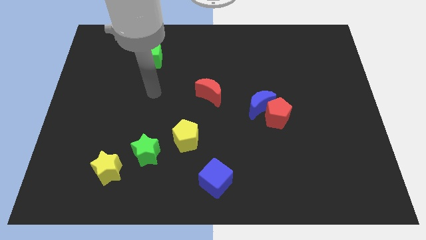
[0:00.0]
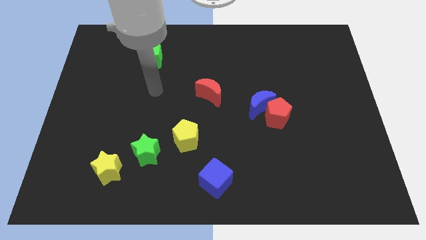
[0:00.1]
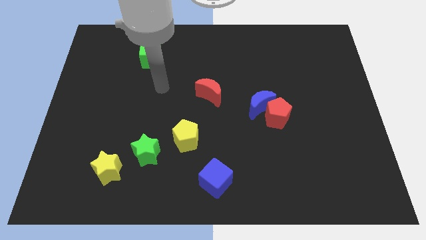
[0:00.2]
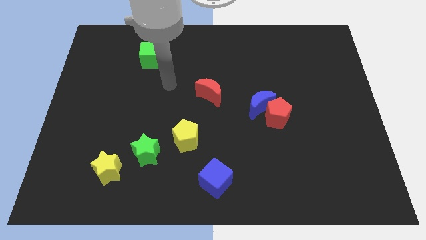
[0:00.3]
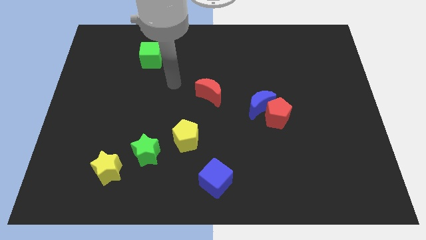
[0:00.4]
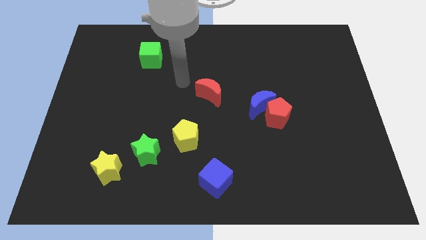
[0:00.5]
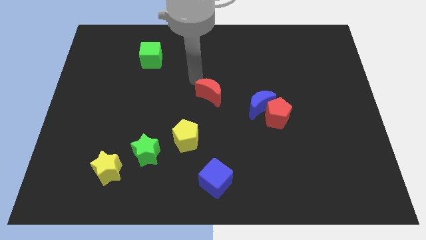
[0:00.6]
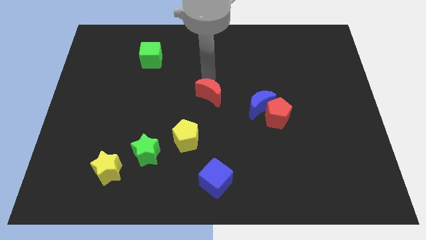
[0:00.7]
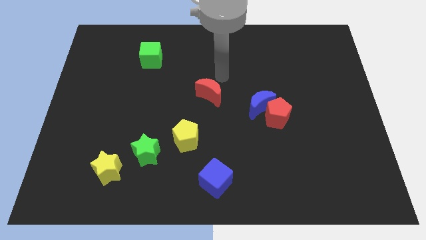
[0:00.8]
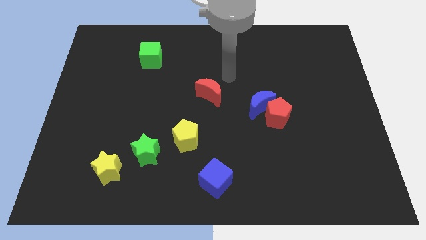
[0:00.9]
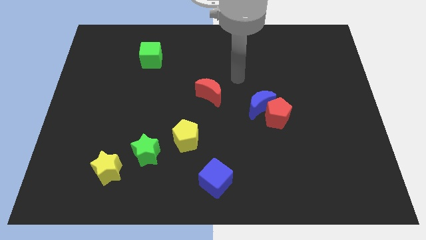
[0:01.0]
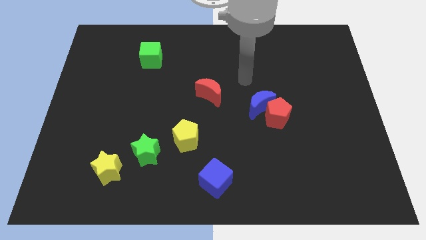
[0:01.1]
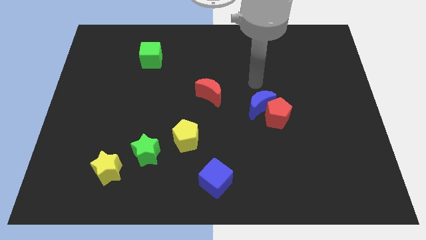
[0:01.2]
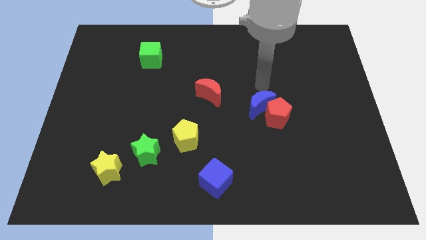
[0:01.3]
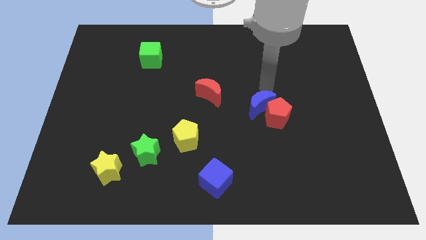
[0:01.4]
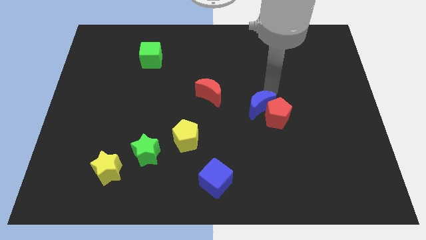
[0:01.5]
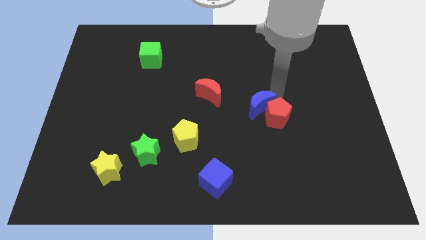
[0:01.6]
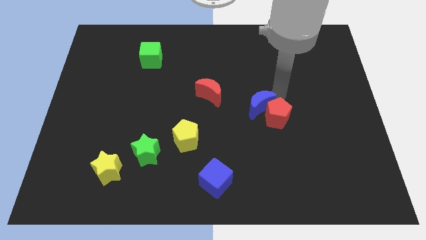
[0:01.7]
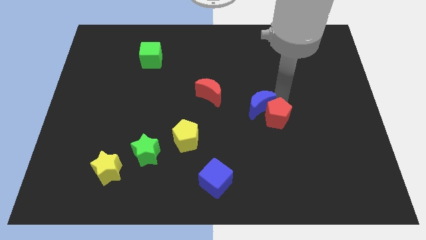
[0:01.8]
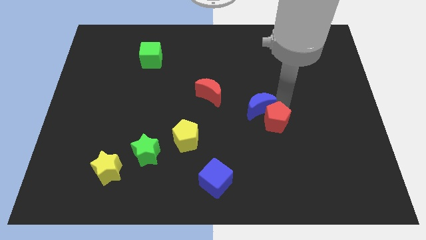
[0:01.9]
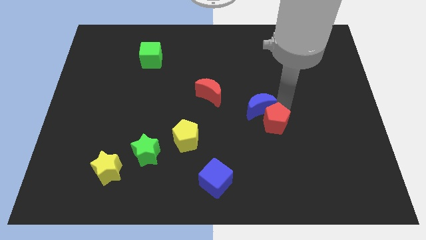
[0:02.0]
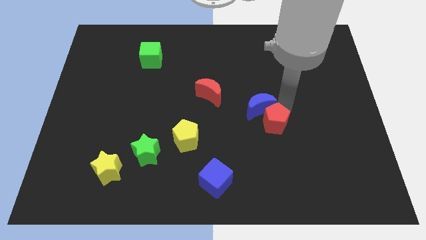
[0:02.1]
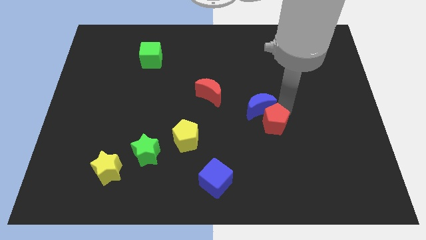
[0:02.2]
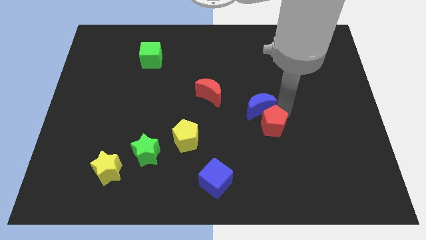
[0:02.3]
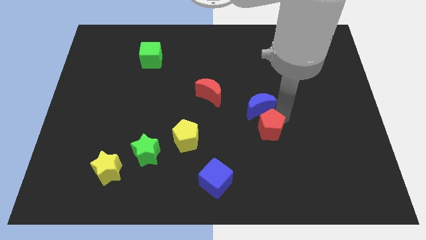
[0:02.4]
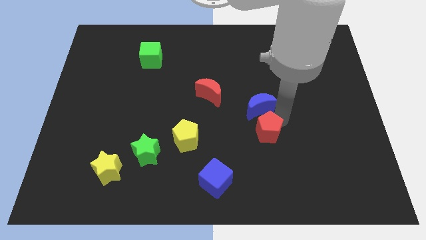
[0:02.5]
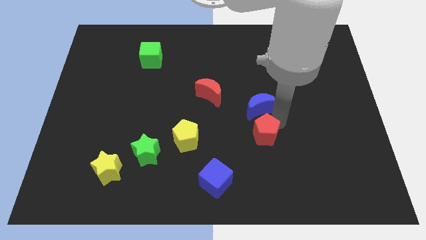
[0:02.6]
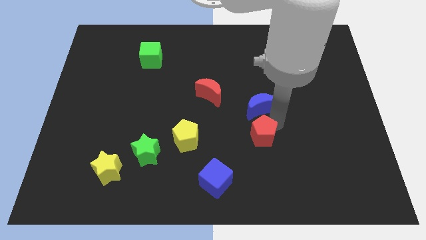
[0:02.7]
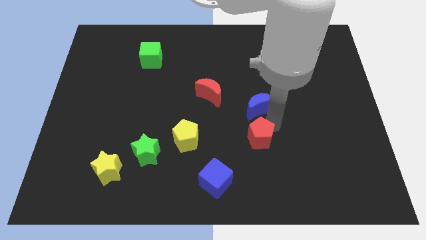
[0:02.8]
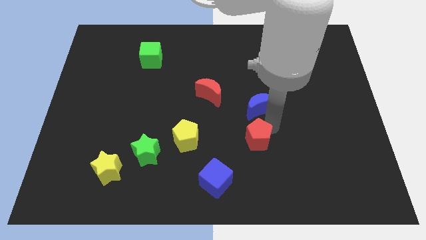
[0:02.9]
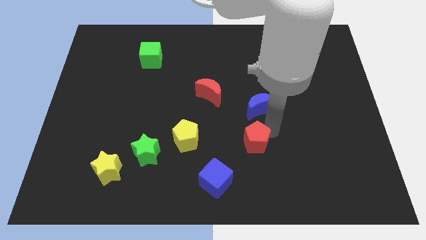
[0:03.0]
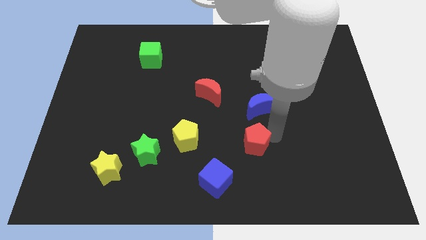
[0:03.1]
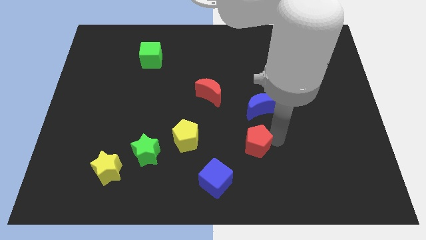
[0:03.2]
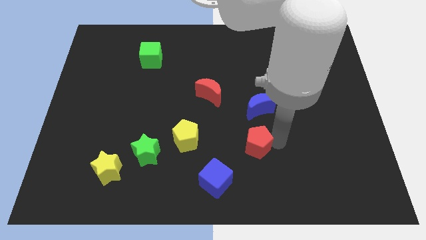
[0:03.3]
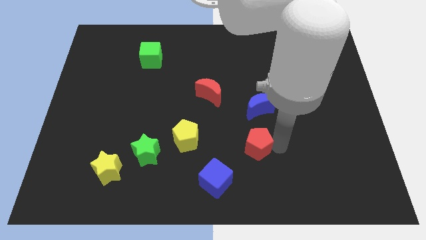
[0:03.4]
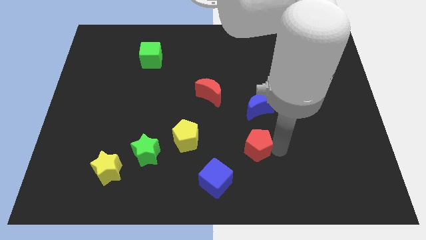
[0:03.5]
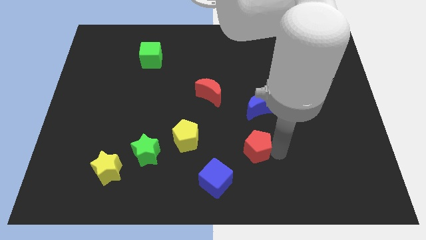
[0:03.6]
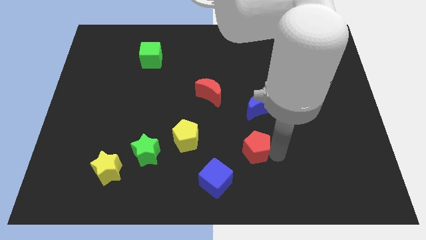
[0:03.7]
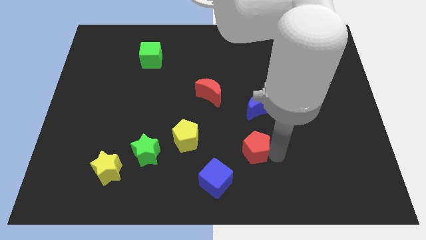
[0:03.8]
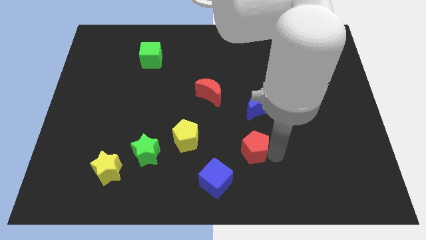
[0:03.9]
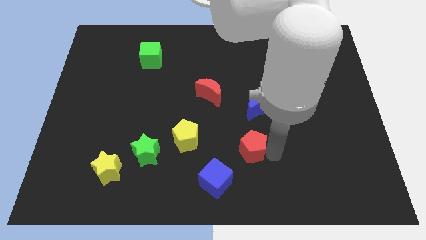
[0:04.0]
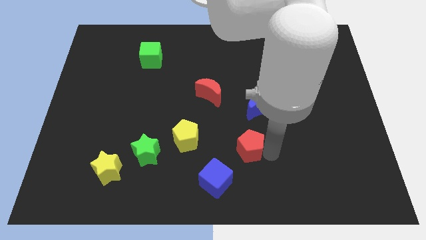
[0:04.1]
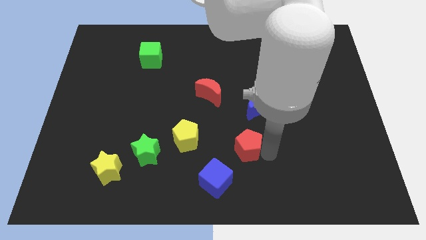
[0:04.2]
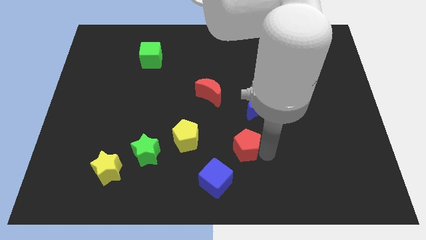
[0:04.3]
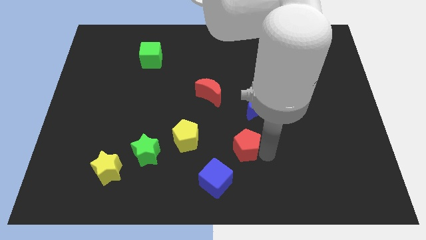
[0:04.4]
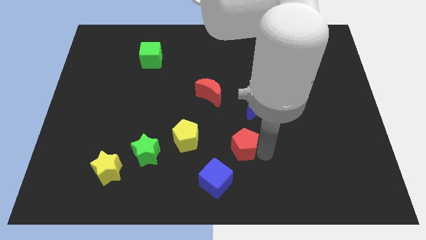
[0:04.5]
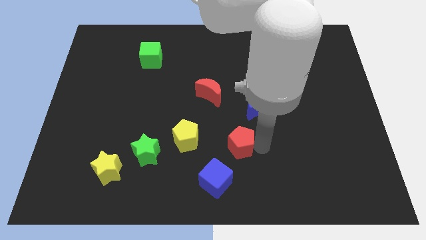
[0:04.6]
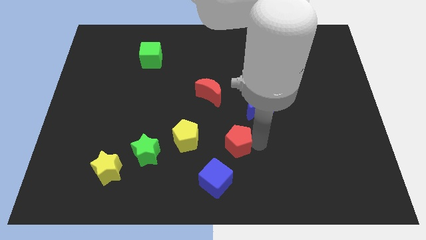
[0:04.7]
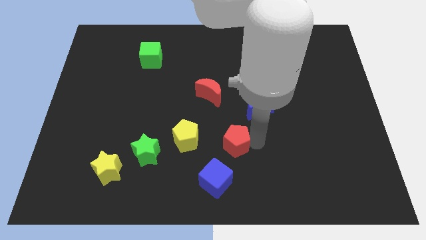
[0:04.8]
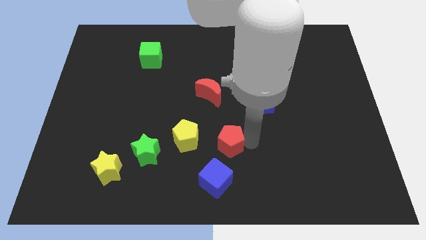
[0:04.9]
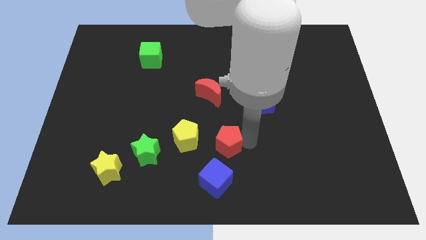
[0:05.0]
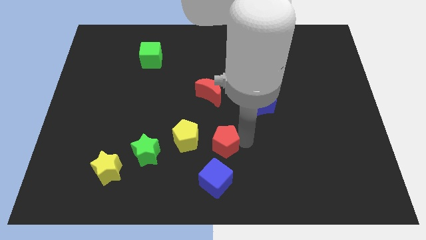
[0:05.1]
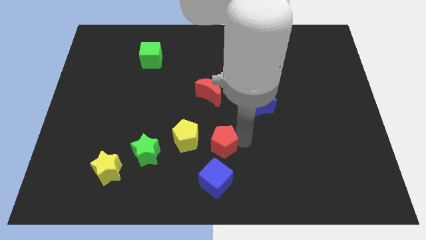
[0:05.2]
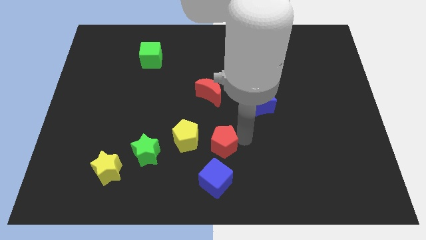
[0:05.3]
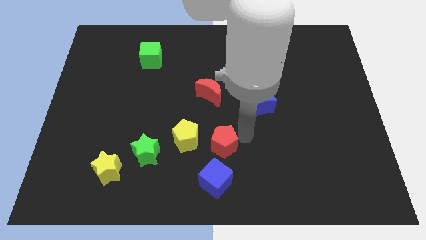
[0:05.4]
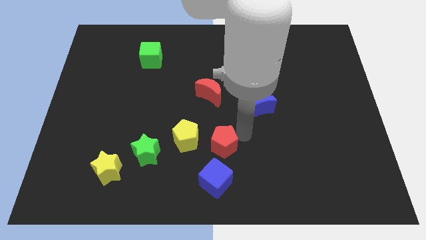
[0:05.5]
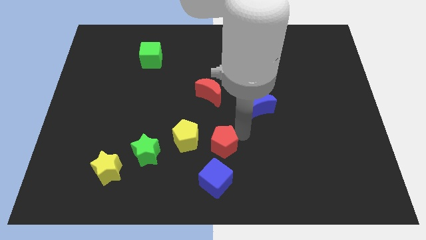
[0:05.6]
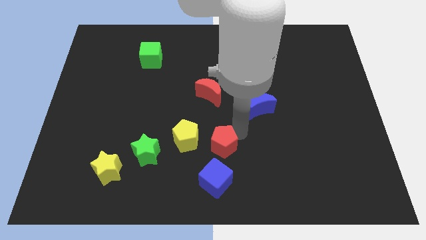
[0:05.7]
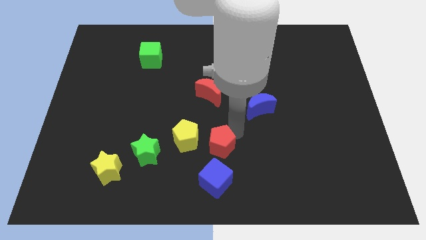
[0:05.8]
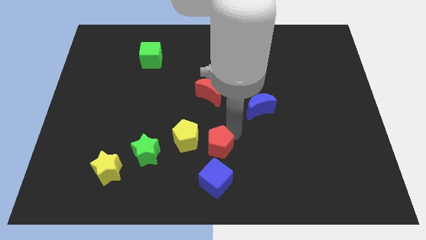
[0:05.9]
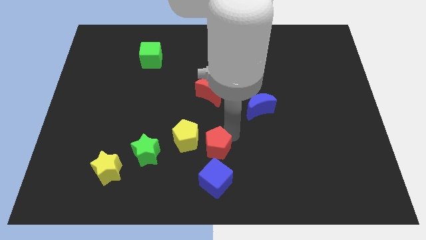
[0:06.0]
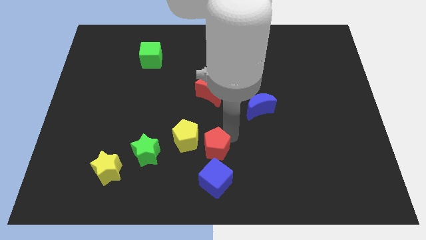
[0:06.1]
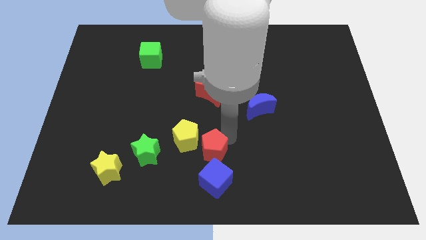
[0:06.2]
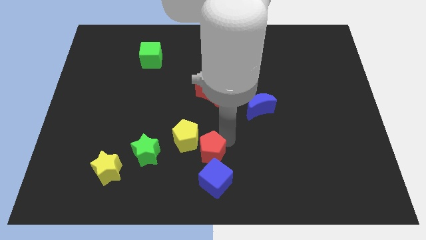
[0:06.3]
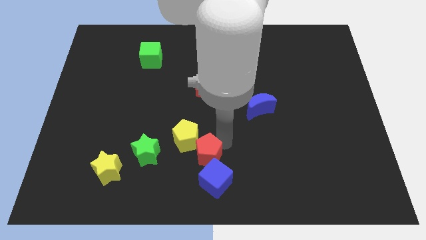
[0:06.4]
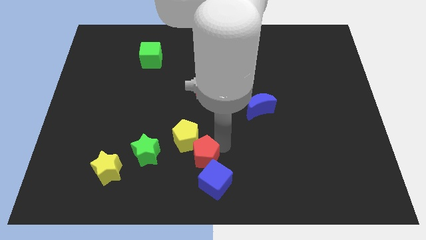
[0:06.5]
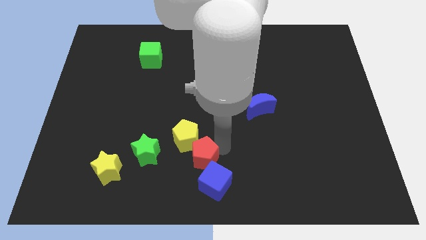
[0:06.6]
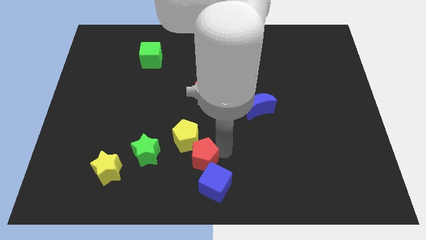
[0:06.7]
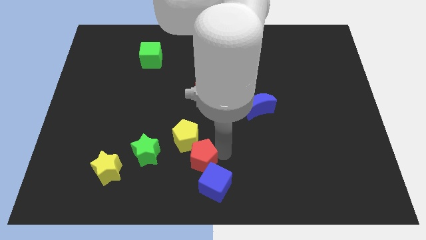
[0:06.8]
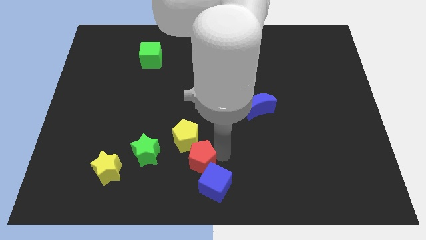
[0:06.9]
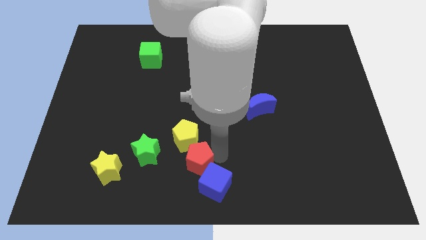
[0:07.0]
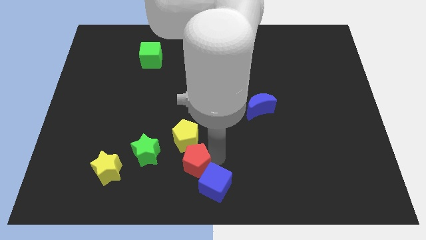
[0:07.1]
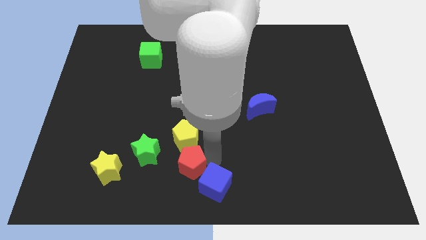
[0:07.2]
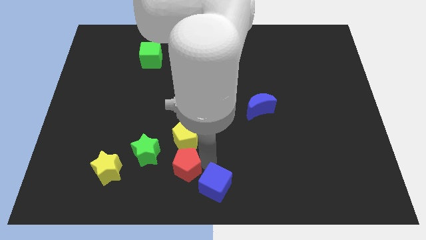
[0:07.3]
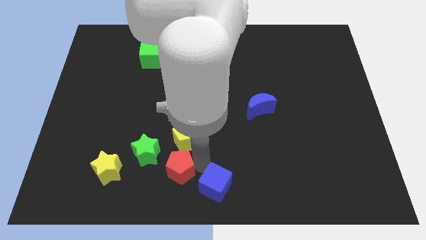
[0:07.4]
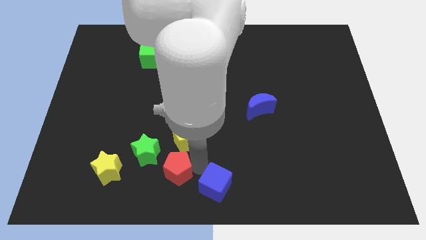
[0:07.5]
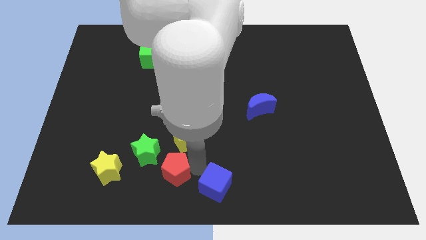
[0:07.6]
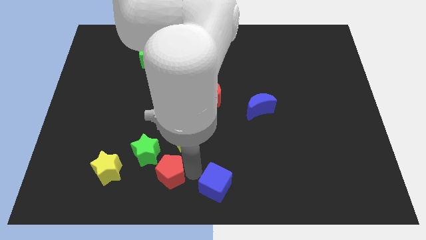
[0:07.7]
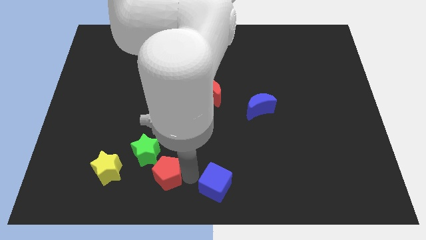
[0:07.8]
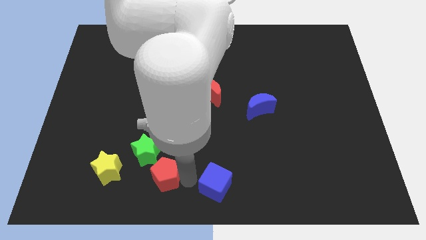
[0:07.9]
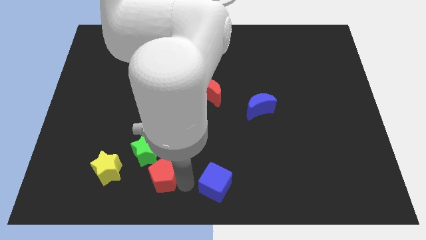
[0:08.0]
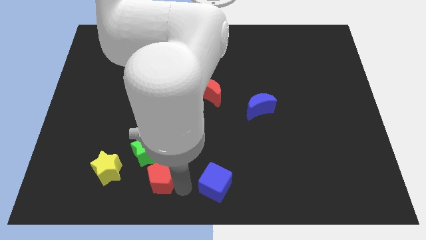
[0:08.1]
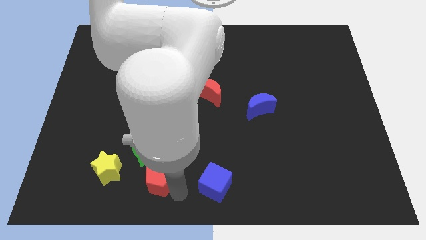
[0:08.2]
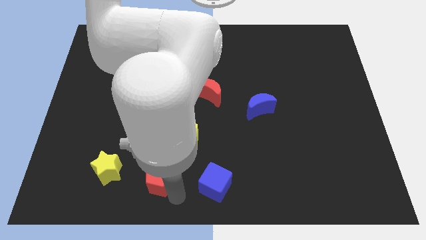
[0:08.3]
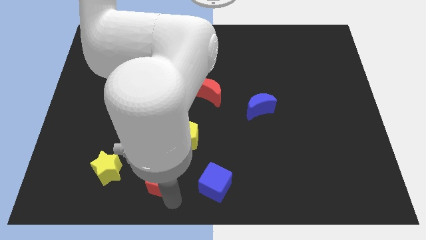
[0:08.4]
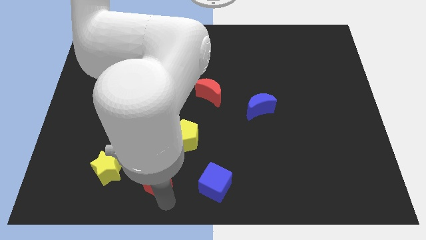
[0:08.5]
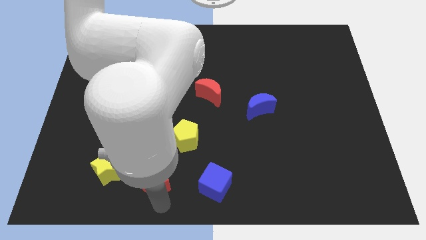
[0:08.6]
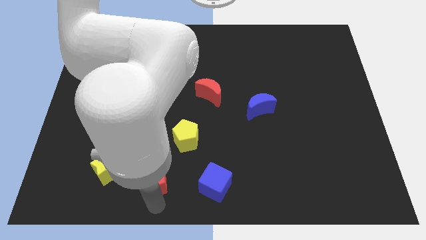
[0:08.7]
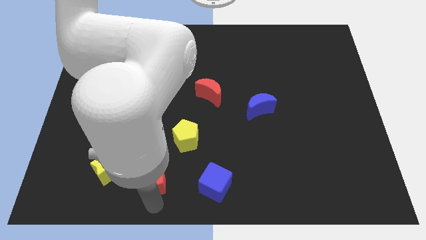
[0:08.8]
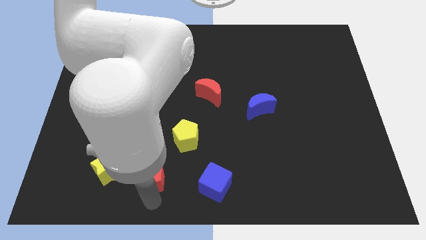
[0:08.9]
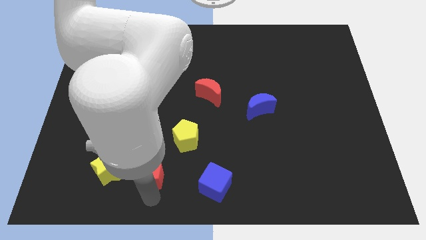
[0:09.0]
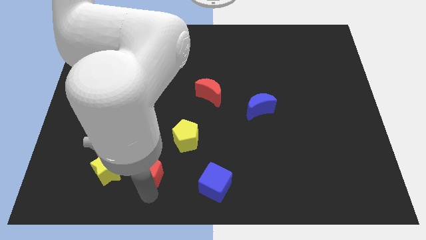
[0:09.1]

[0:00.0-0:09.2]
slide the red pentagon to the green star
